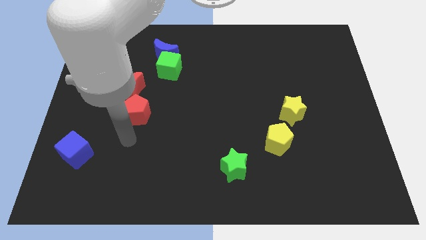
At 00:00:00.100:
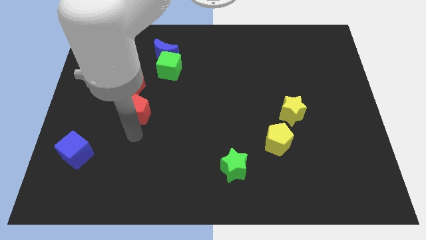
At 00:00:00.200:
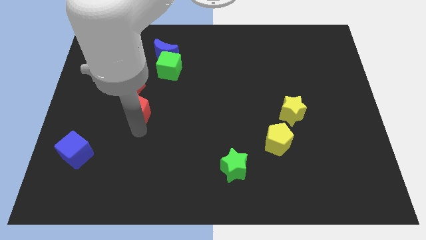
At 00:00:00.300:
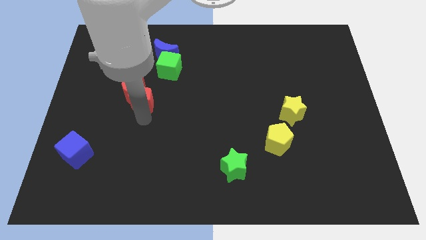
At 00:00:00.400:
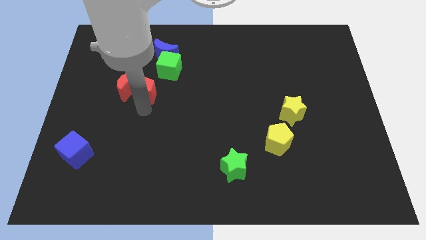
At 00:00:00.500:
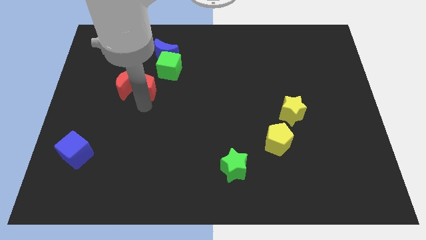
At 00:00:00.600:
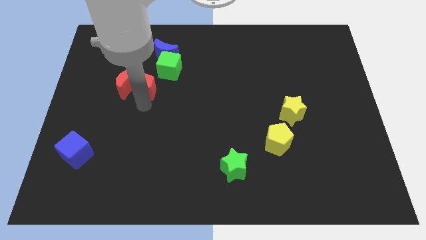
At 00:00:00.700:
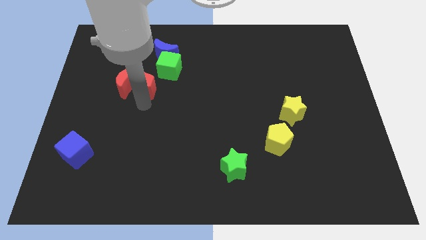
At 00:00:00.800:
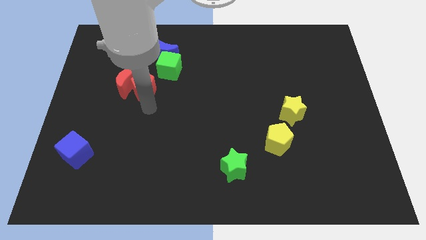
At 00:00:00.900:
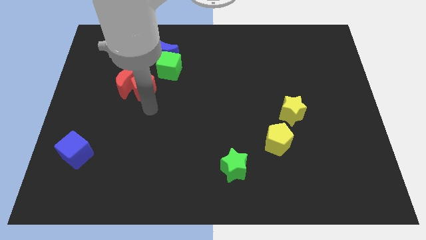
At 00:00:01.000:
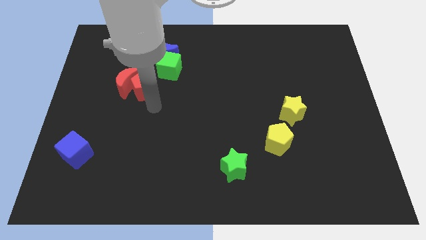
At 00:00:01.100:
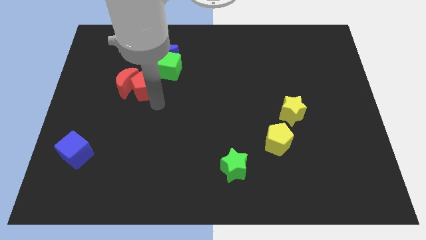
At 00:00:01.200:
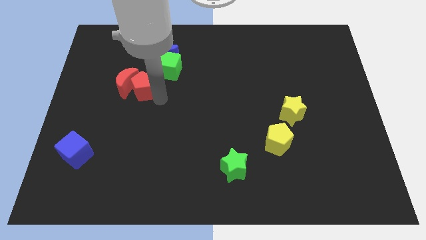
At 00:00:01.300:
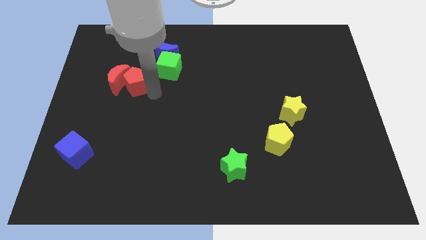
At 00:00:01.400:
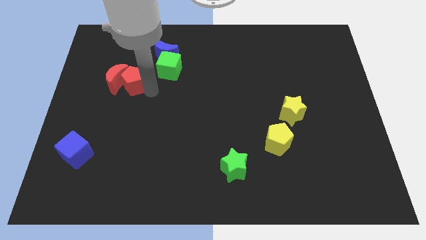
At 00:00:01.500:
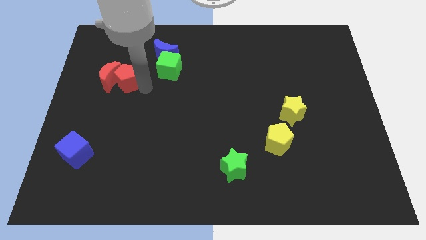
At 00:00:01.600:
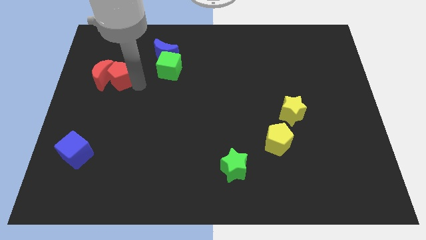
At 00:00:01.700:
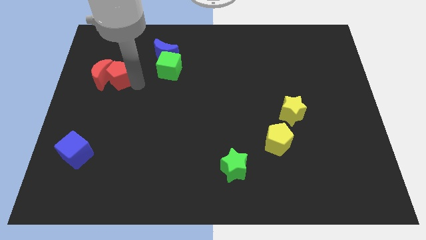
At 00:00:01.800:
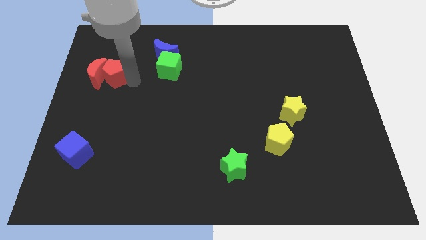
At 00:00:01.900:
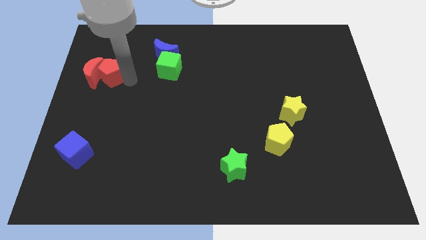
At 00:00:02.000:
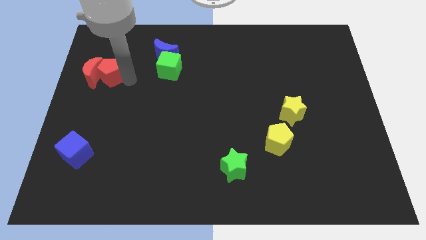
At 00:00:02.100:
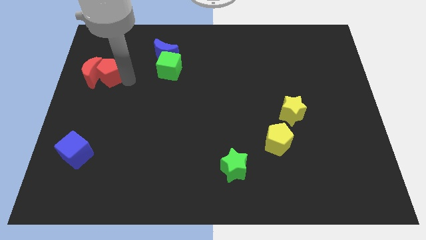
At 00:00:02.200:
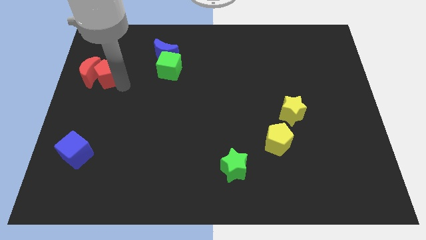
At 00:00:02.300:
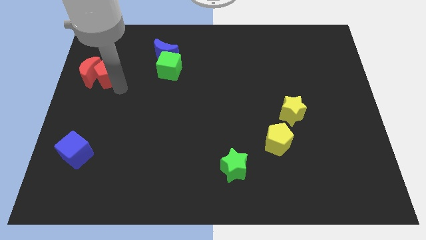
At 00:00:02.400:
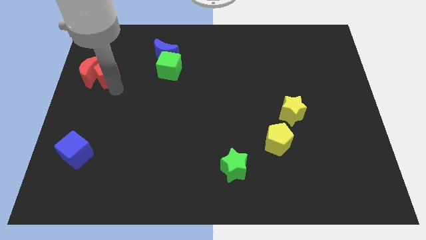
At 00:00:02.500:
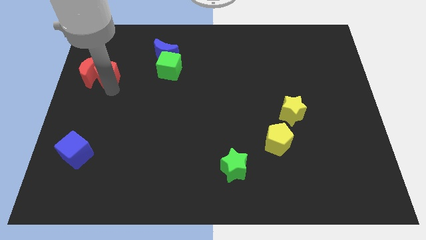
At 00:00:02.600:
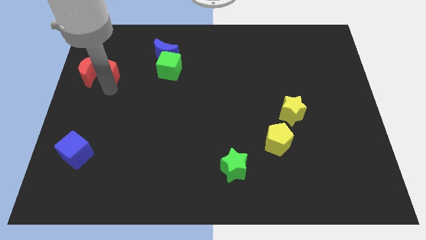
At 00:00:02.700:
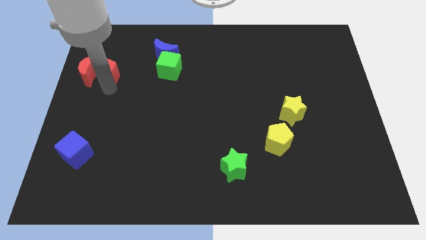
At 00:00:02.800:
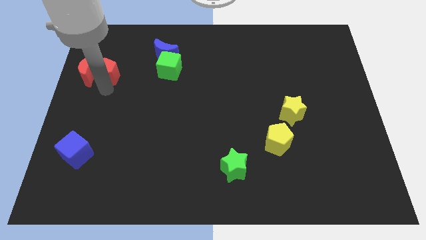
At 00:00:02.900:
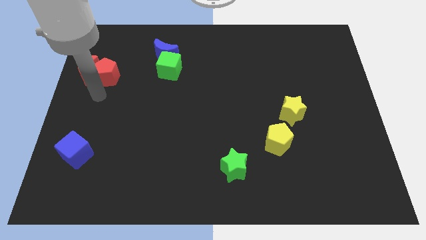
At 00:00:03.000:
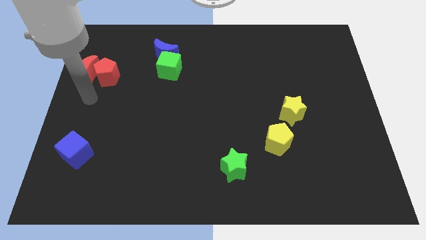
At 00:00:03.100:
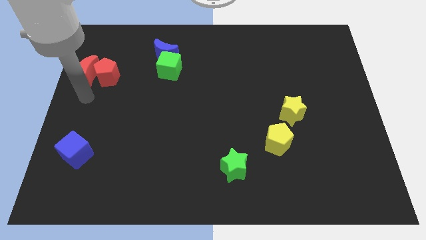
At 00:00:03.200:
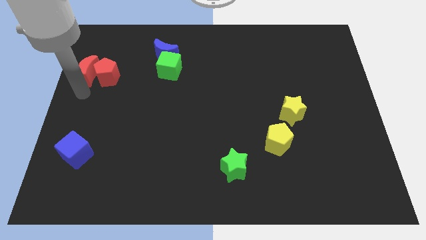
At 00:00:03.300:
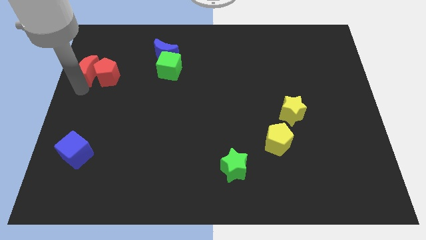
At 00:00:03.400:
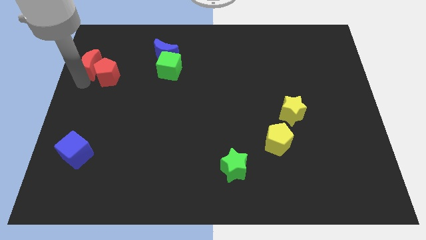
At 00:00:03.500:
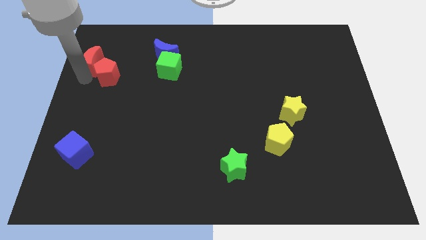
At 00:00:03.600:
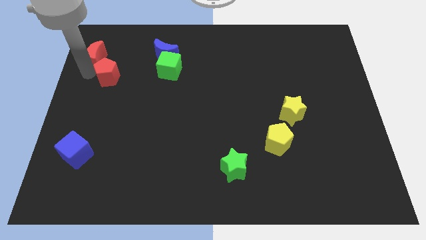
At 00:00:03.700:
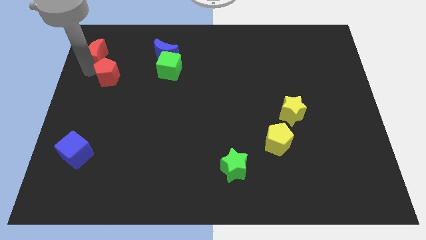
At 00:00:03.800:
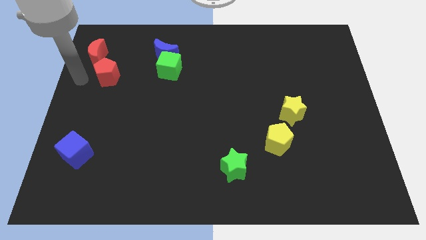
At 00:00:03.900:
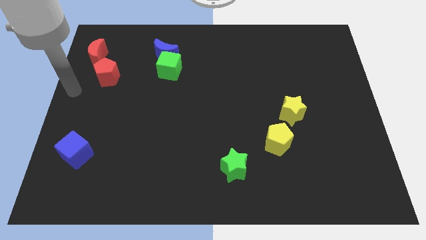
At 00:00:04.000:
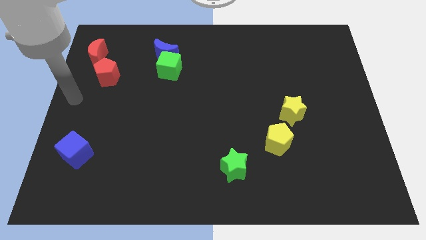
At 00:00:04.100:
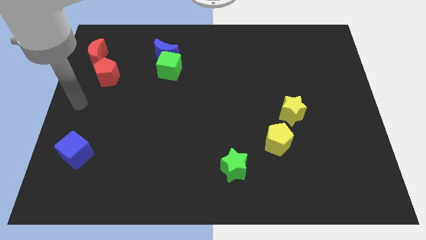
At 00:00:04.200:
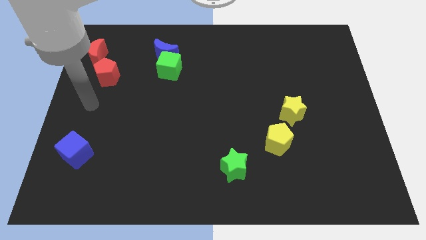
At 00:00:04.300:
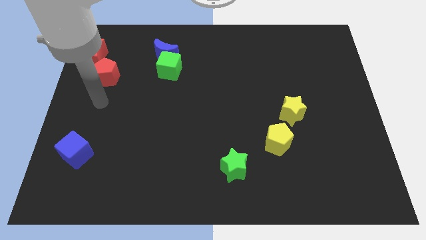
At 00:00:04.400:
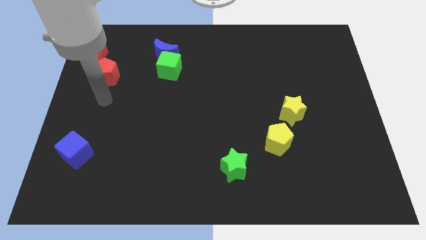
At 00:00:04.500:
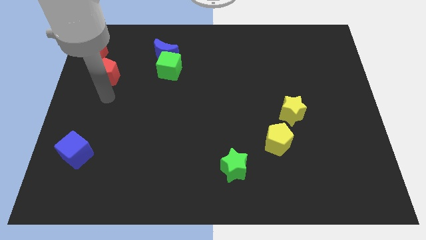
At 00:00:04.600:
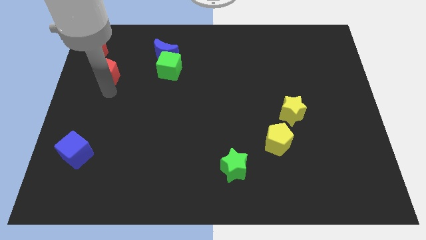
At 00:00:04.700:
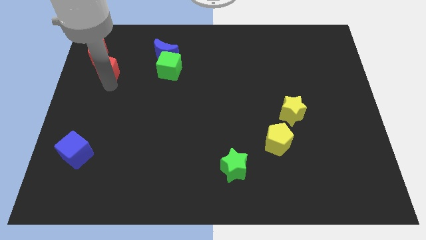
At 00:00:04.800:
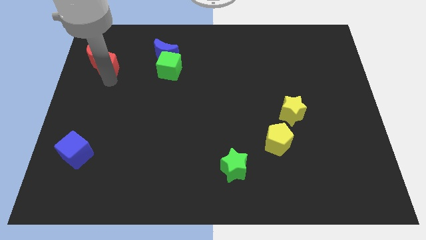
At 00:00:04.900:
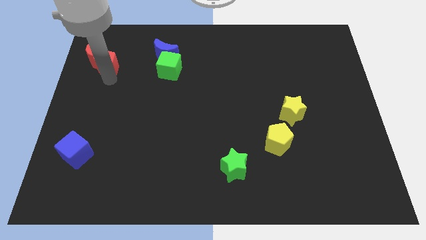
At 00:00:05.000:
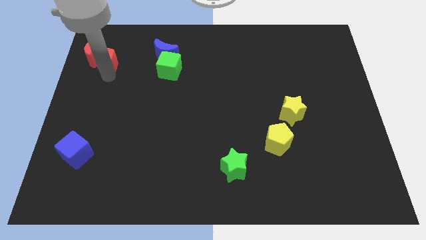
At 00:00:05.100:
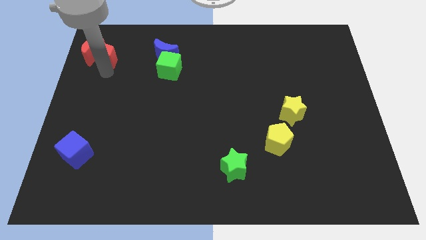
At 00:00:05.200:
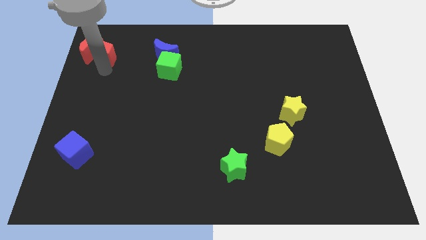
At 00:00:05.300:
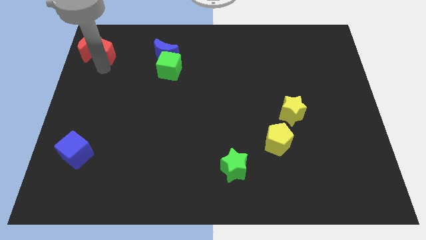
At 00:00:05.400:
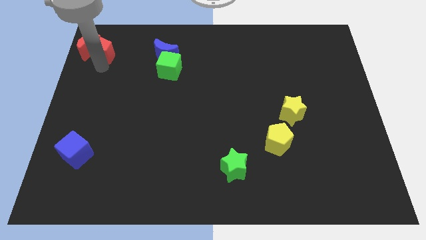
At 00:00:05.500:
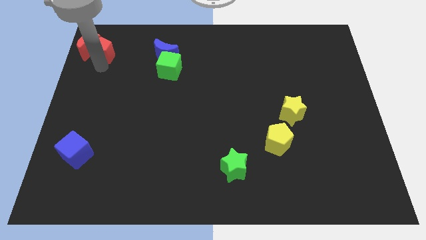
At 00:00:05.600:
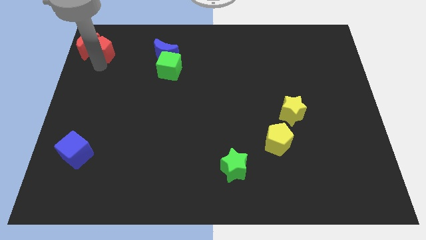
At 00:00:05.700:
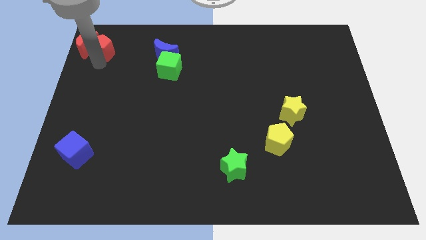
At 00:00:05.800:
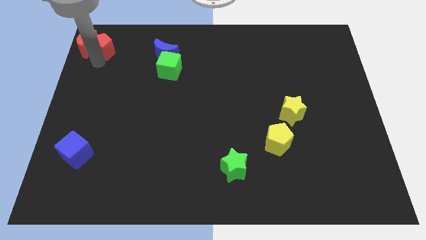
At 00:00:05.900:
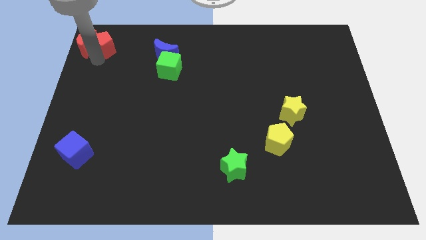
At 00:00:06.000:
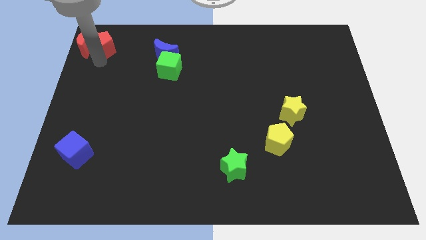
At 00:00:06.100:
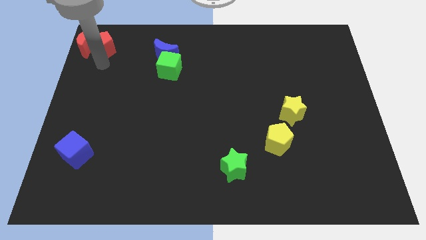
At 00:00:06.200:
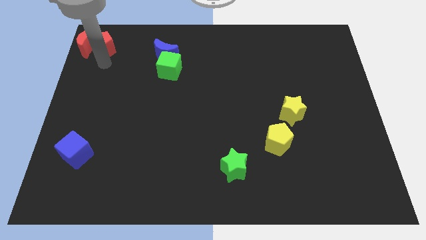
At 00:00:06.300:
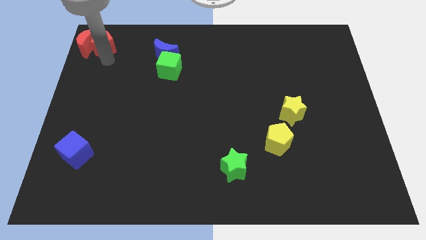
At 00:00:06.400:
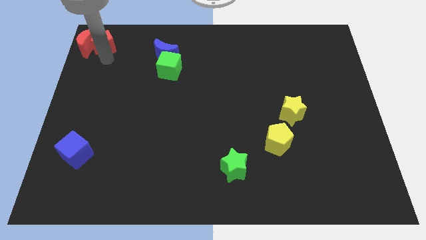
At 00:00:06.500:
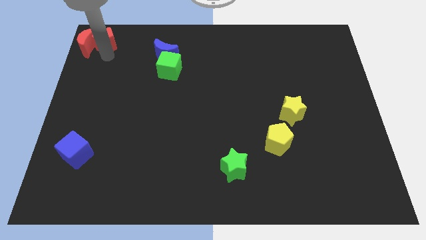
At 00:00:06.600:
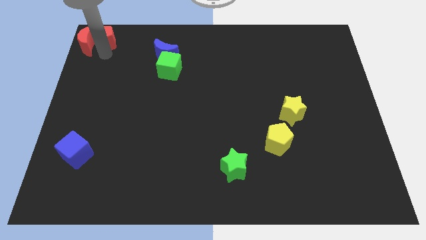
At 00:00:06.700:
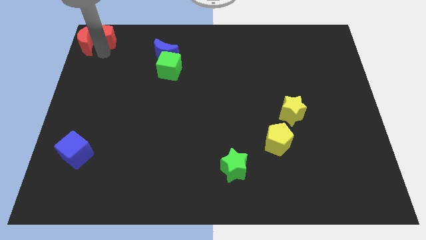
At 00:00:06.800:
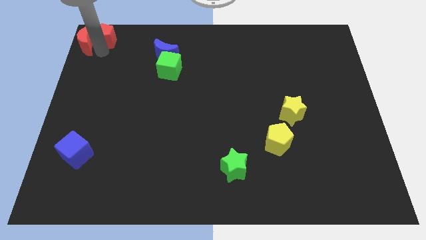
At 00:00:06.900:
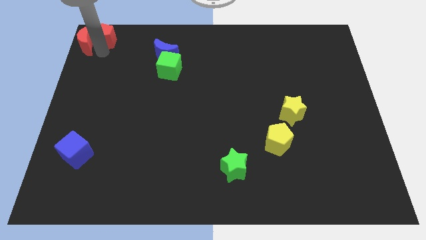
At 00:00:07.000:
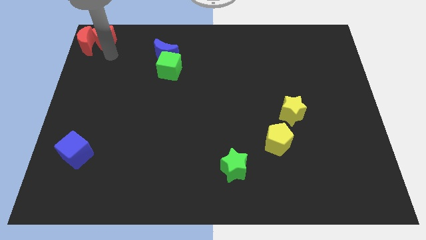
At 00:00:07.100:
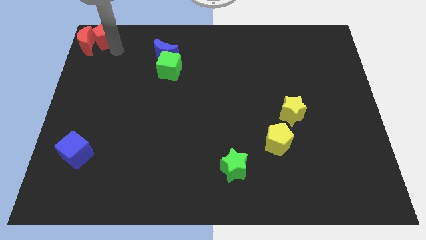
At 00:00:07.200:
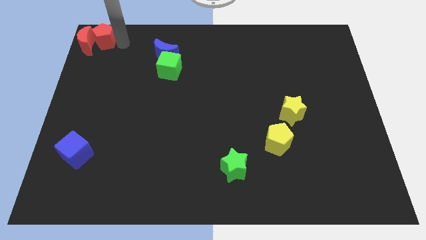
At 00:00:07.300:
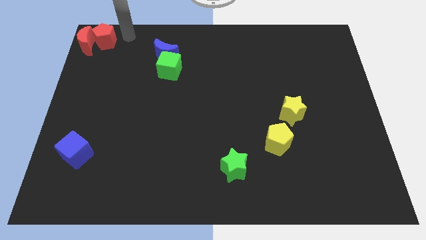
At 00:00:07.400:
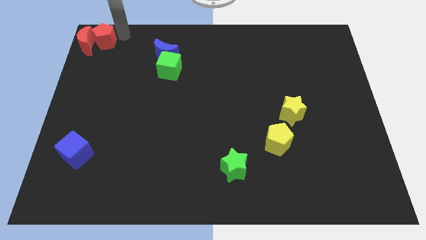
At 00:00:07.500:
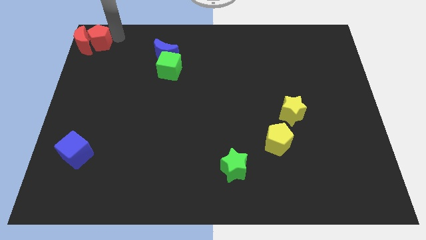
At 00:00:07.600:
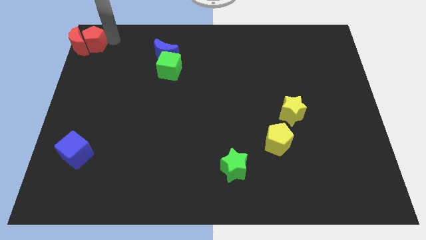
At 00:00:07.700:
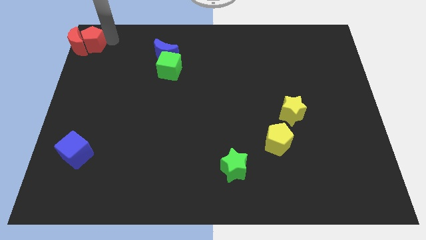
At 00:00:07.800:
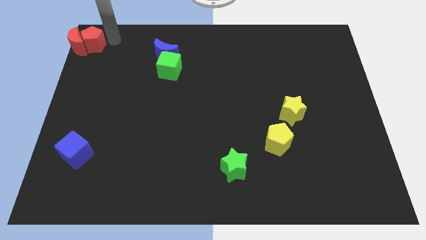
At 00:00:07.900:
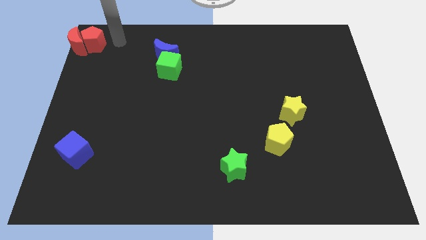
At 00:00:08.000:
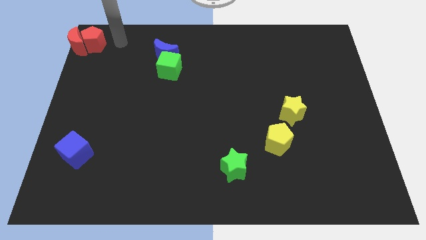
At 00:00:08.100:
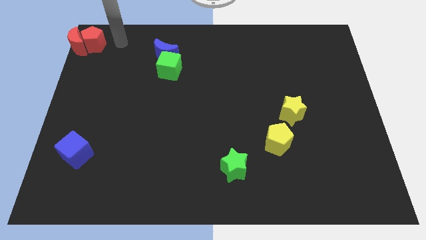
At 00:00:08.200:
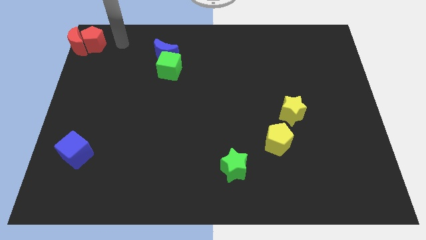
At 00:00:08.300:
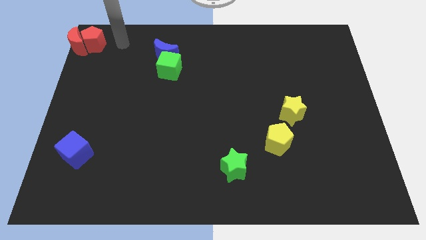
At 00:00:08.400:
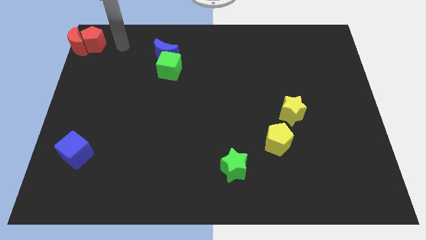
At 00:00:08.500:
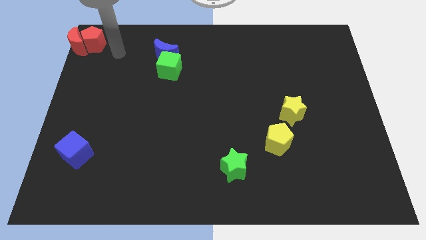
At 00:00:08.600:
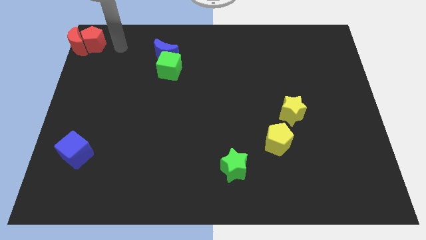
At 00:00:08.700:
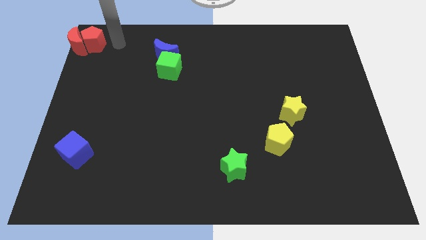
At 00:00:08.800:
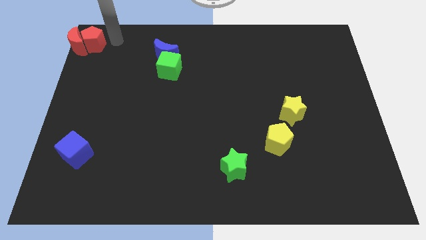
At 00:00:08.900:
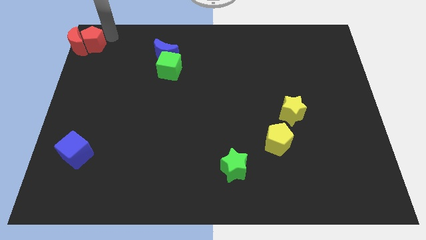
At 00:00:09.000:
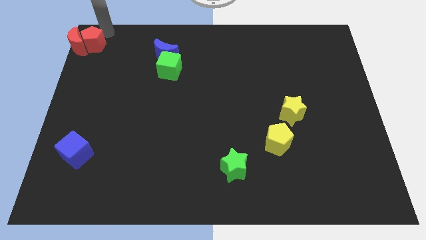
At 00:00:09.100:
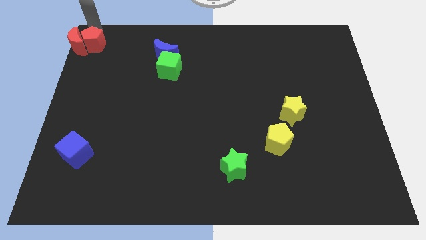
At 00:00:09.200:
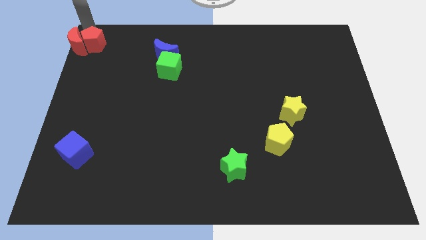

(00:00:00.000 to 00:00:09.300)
place the red blocks at the top left corner of the board
